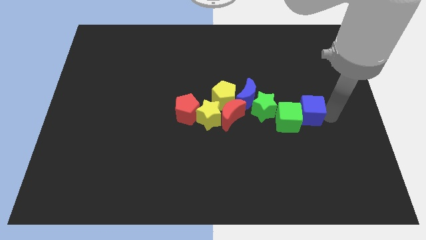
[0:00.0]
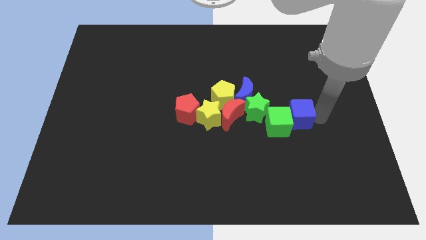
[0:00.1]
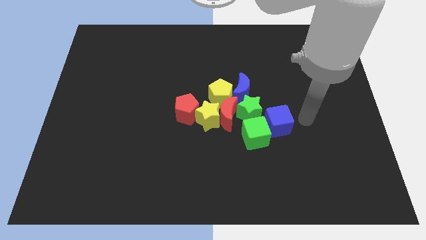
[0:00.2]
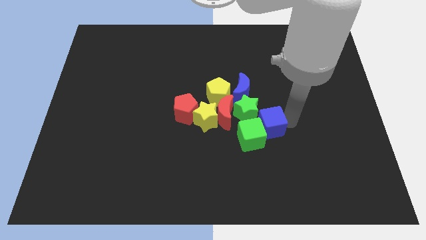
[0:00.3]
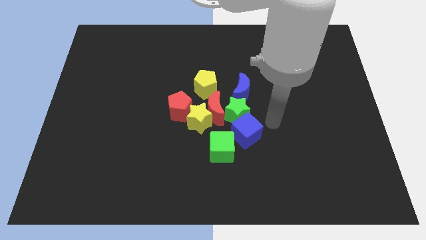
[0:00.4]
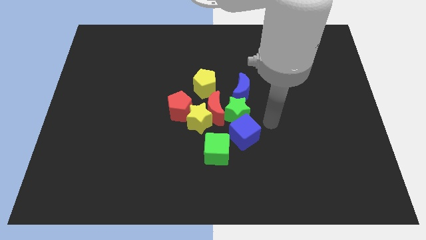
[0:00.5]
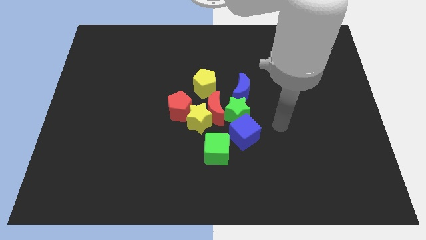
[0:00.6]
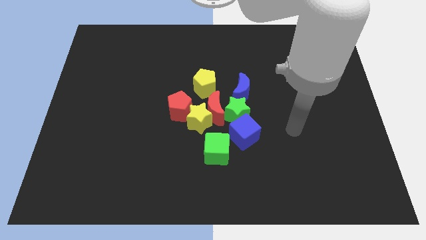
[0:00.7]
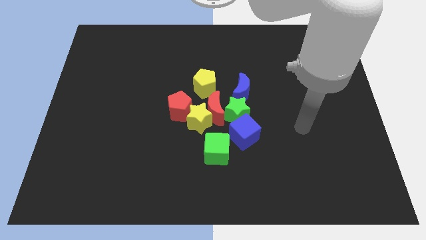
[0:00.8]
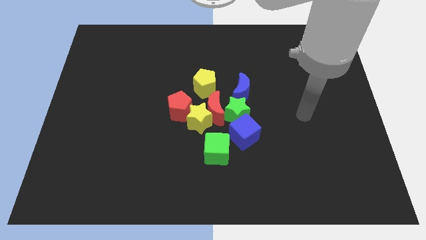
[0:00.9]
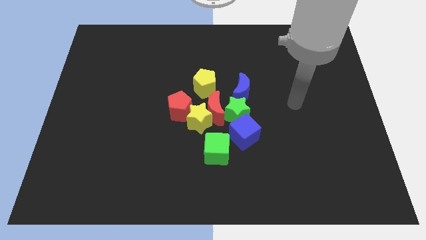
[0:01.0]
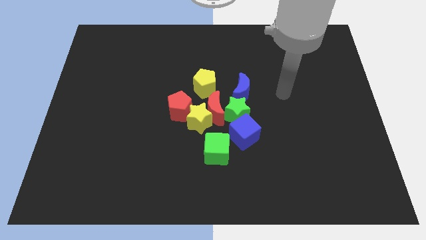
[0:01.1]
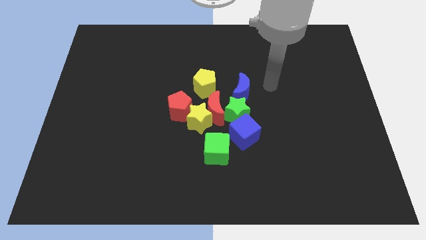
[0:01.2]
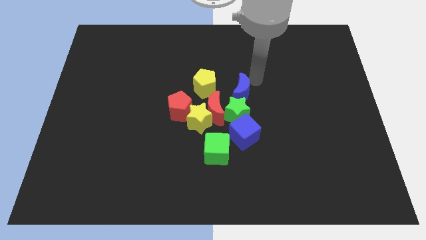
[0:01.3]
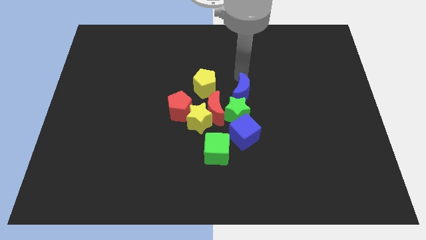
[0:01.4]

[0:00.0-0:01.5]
push both the cubes towards the bottom
